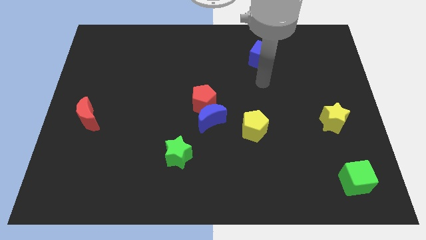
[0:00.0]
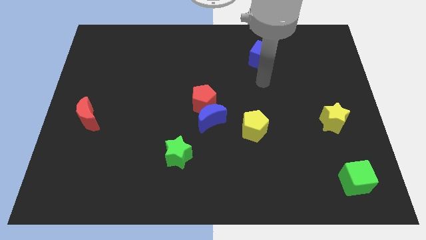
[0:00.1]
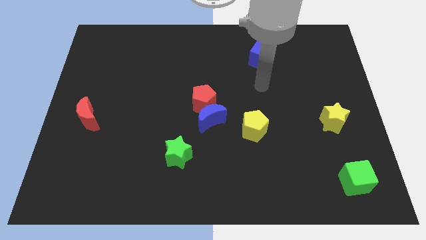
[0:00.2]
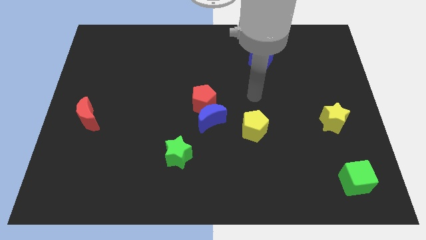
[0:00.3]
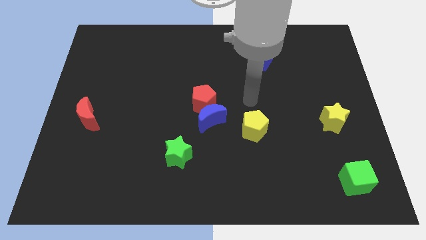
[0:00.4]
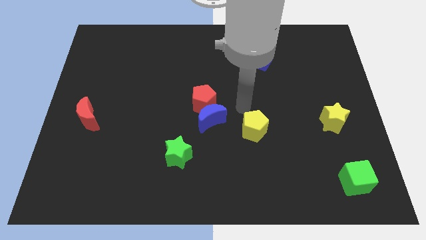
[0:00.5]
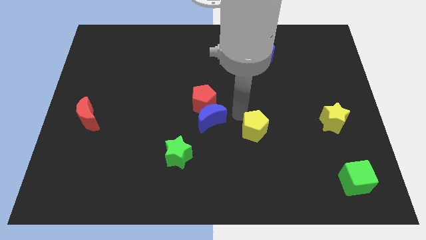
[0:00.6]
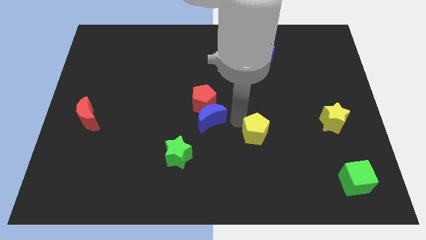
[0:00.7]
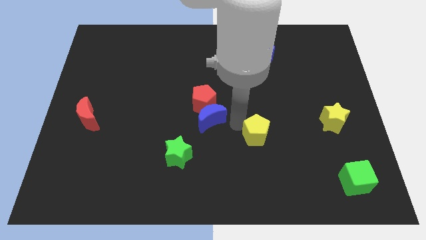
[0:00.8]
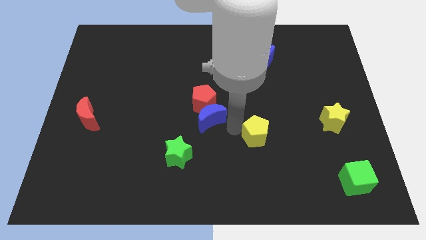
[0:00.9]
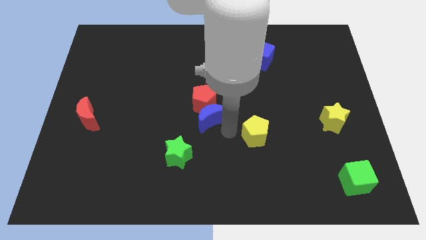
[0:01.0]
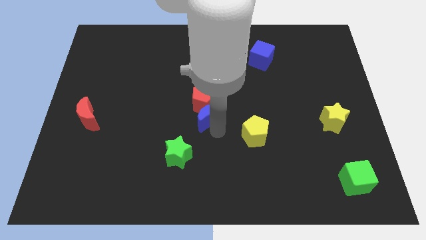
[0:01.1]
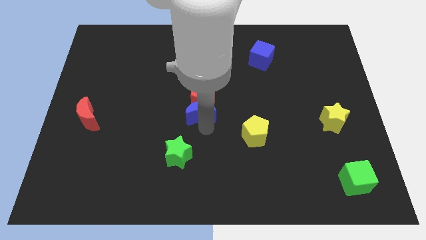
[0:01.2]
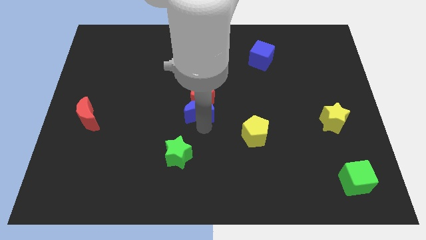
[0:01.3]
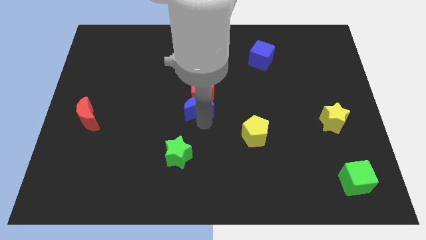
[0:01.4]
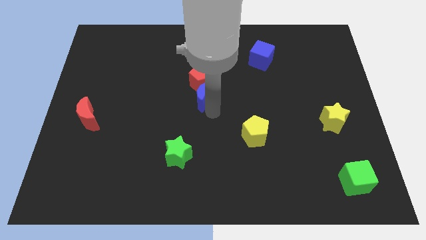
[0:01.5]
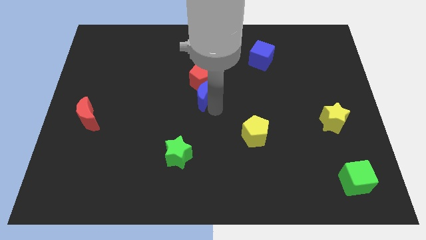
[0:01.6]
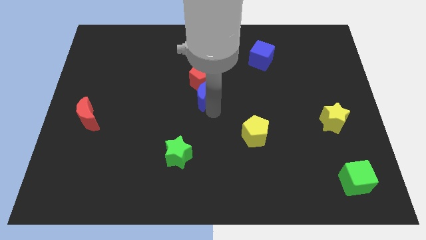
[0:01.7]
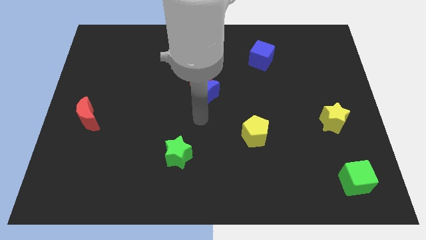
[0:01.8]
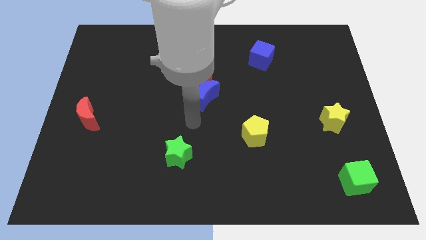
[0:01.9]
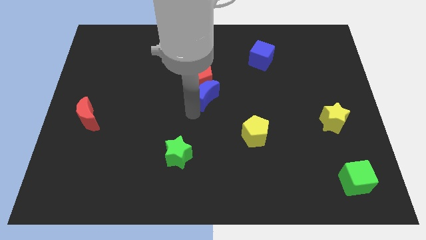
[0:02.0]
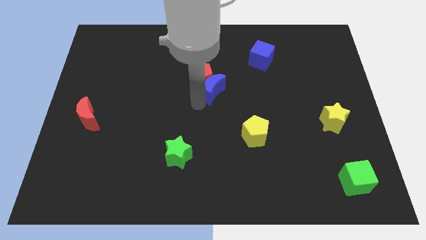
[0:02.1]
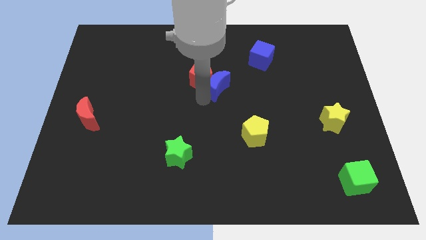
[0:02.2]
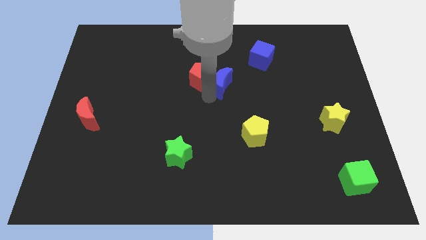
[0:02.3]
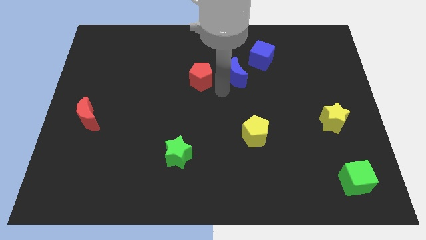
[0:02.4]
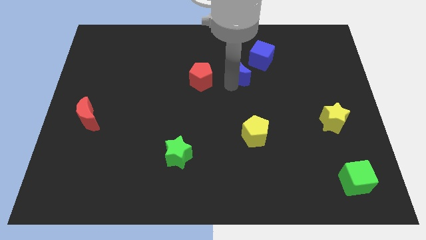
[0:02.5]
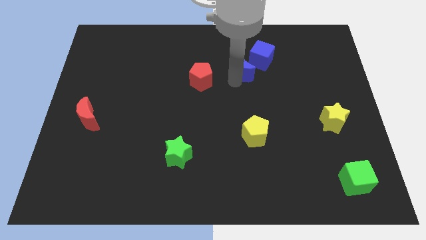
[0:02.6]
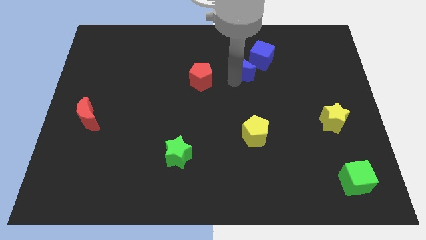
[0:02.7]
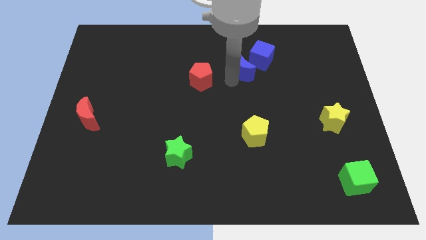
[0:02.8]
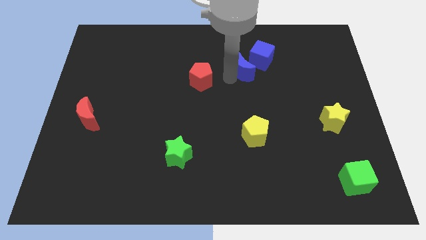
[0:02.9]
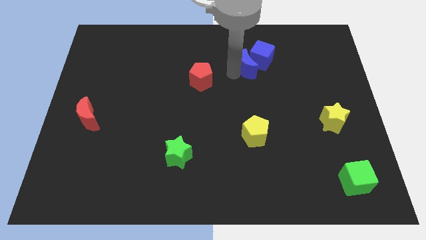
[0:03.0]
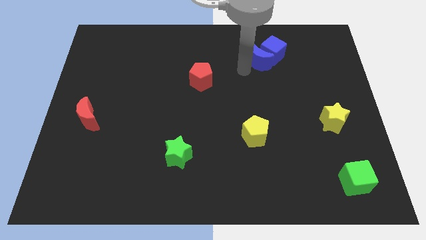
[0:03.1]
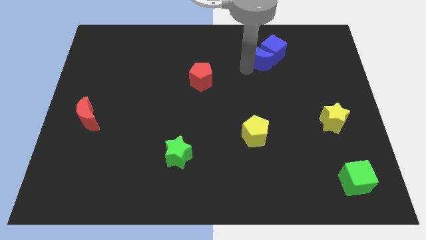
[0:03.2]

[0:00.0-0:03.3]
push the blue moon into the blue cube

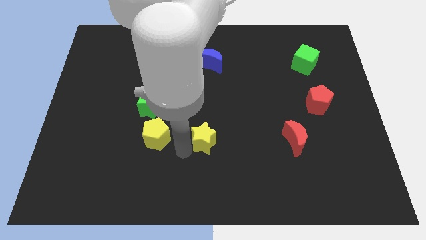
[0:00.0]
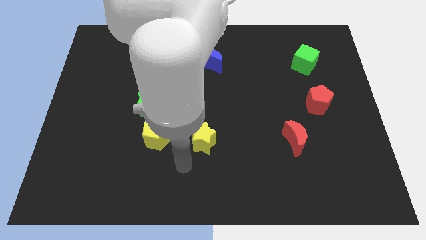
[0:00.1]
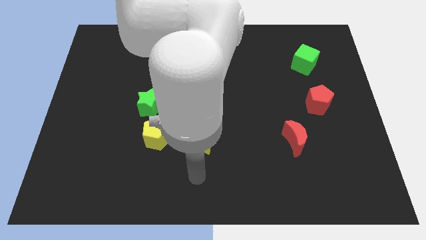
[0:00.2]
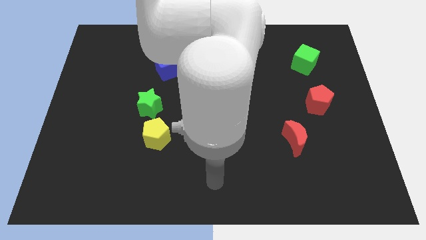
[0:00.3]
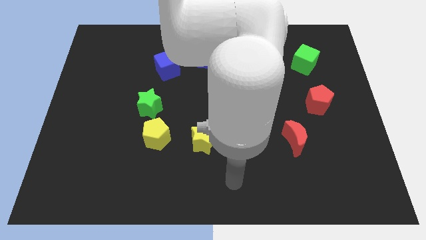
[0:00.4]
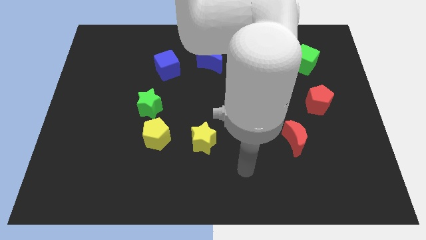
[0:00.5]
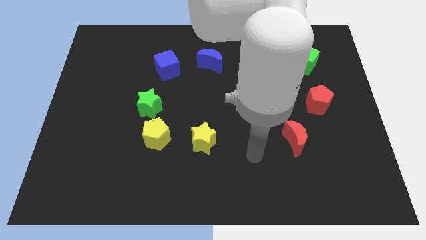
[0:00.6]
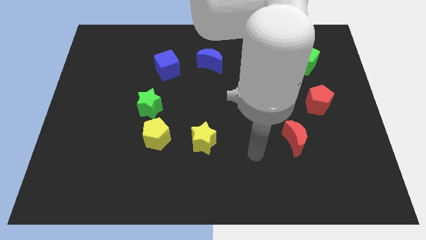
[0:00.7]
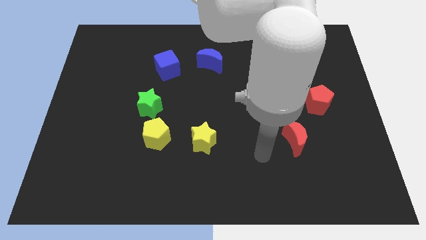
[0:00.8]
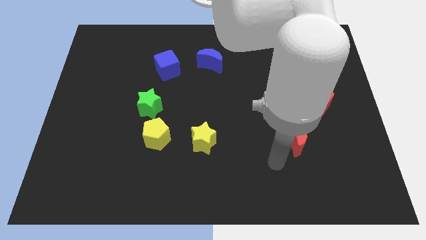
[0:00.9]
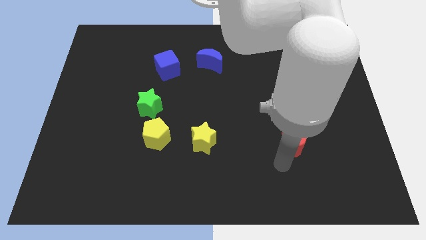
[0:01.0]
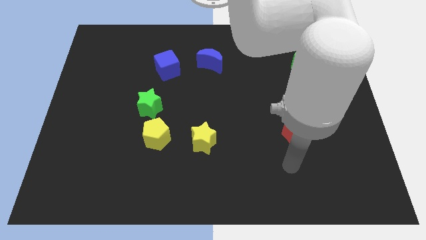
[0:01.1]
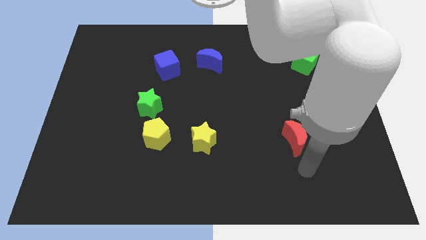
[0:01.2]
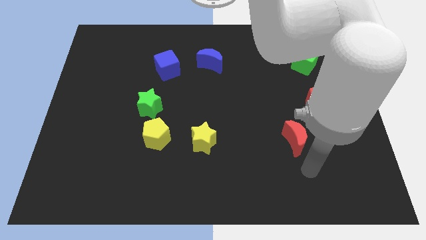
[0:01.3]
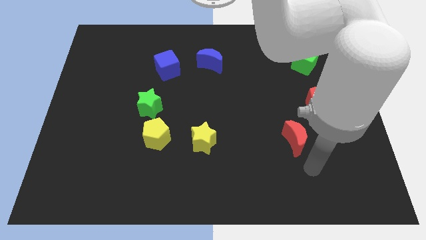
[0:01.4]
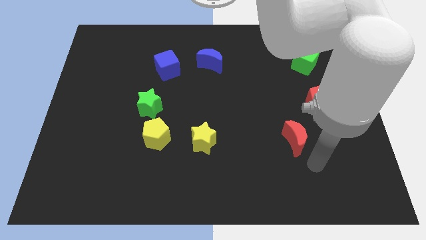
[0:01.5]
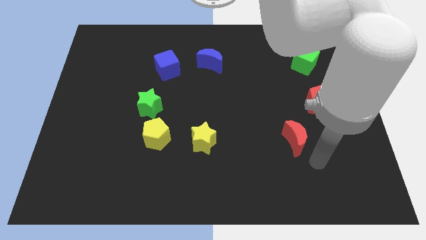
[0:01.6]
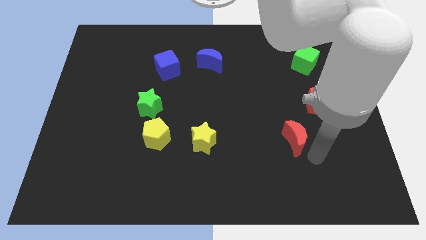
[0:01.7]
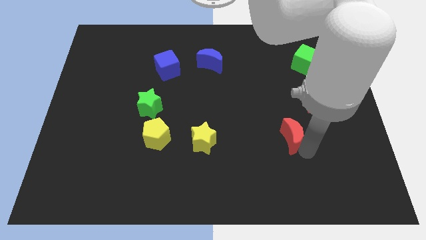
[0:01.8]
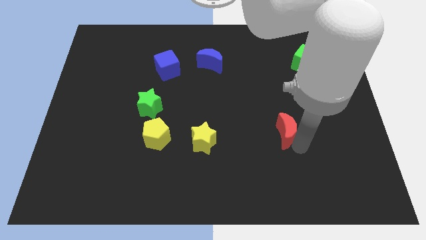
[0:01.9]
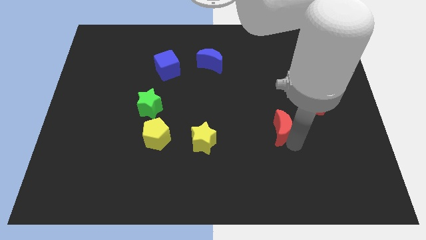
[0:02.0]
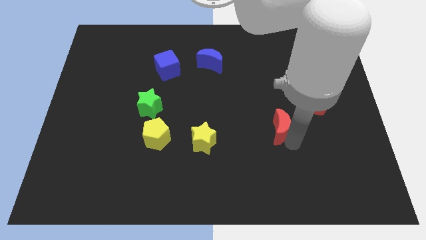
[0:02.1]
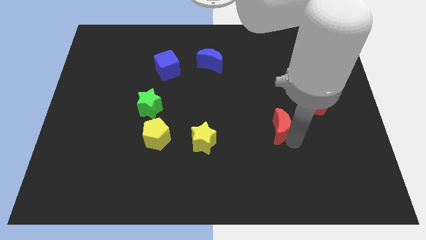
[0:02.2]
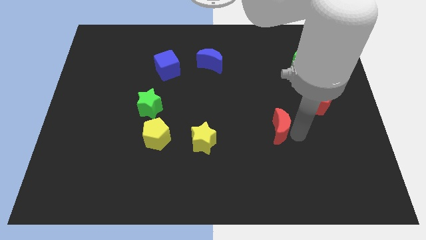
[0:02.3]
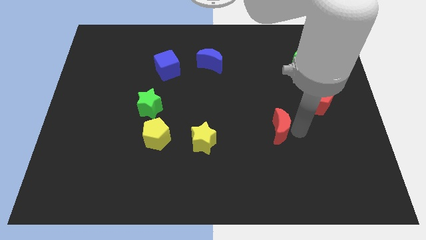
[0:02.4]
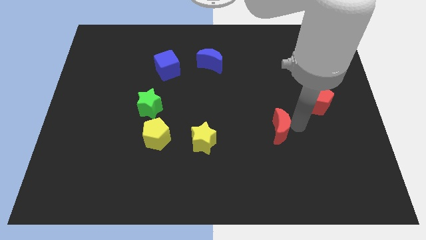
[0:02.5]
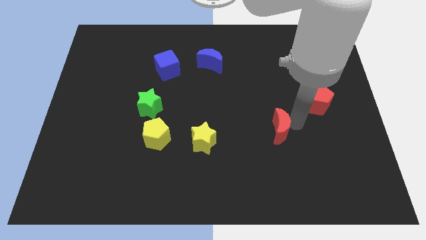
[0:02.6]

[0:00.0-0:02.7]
point your arm between red moon and red pentgon

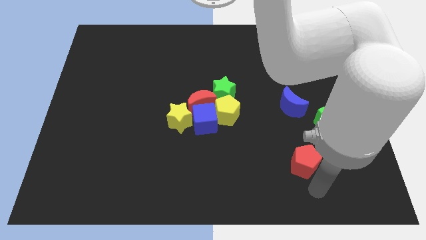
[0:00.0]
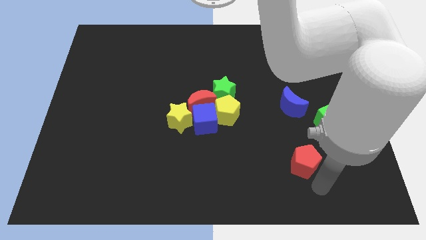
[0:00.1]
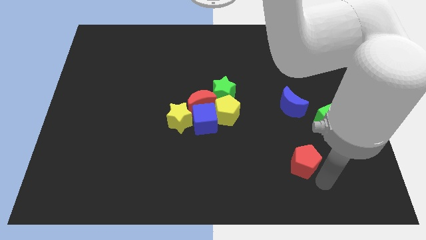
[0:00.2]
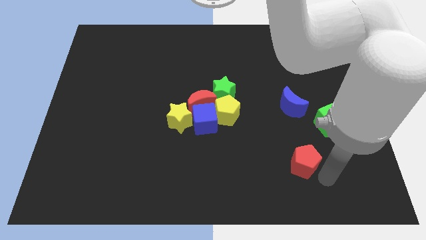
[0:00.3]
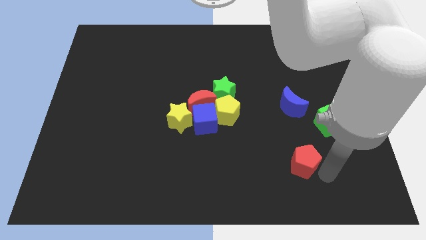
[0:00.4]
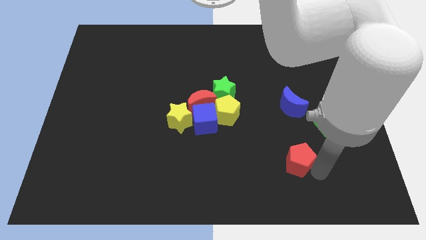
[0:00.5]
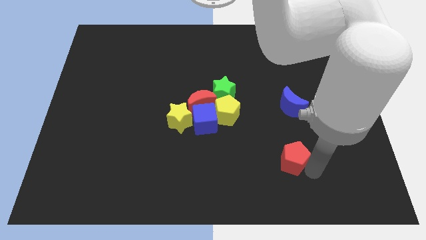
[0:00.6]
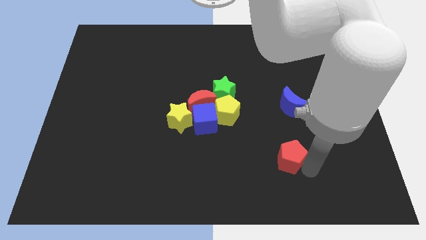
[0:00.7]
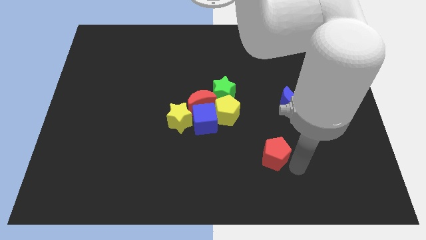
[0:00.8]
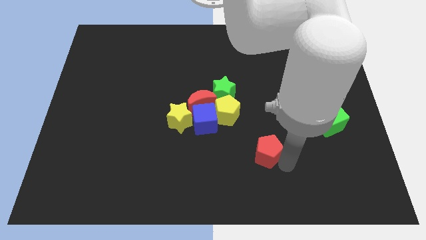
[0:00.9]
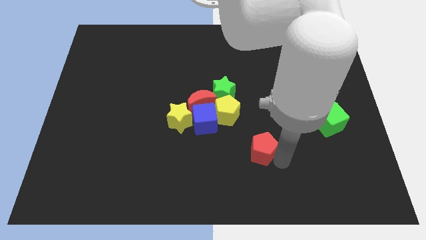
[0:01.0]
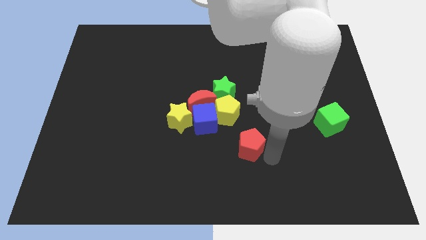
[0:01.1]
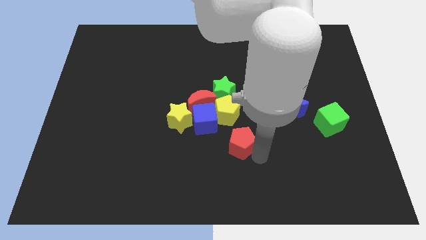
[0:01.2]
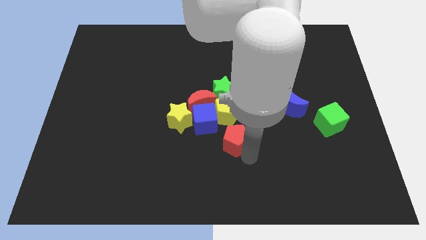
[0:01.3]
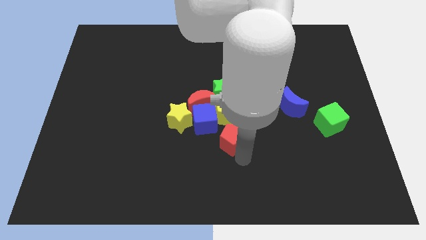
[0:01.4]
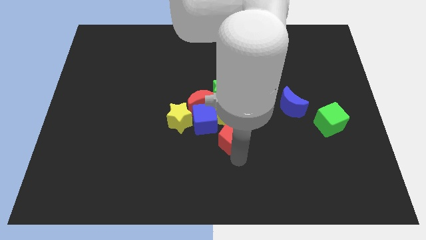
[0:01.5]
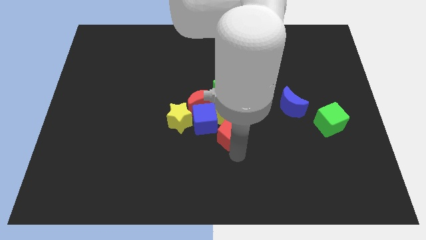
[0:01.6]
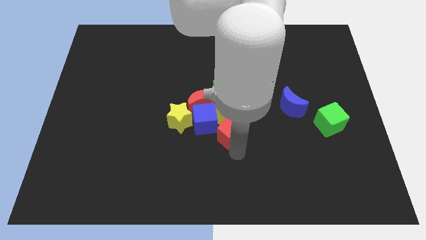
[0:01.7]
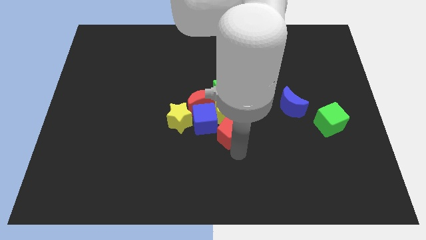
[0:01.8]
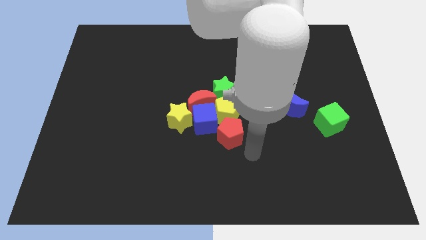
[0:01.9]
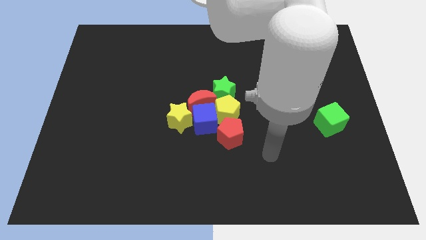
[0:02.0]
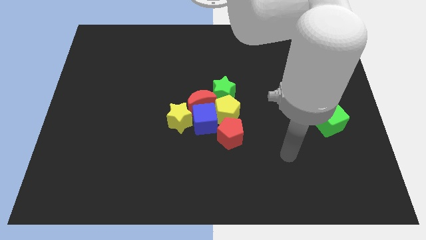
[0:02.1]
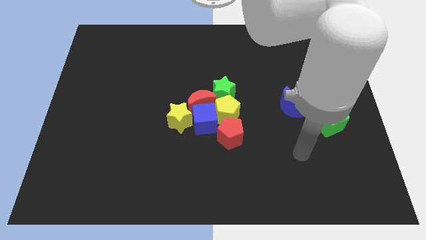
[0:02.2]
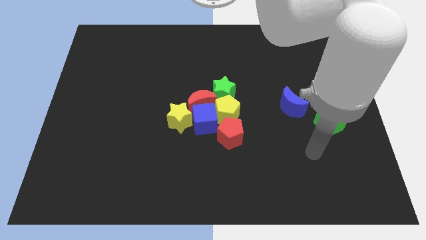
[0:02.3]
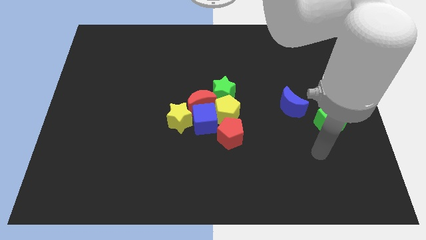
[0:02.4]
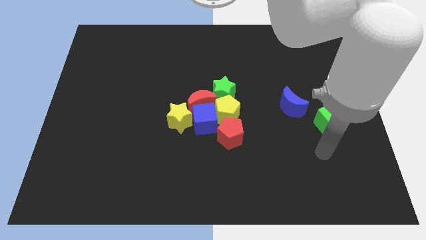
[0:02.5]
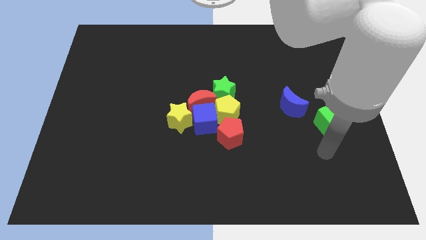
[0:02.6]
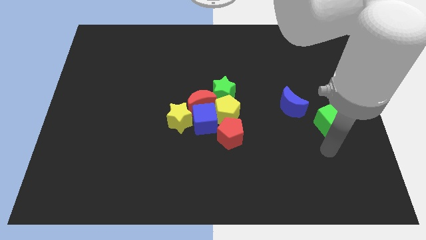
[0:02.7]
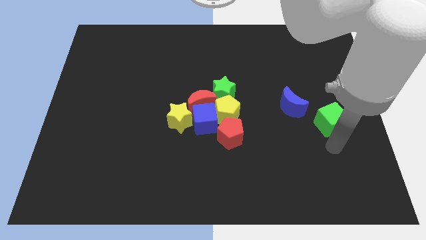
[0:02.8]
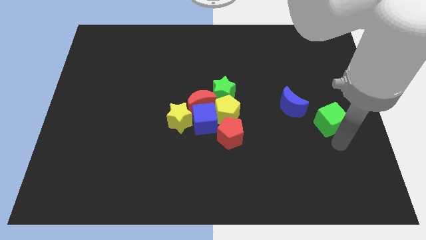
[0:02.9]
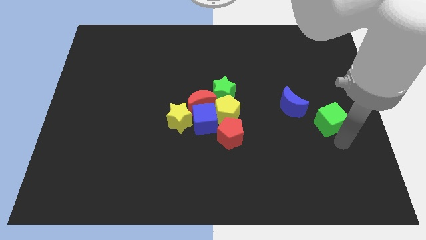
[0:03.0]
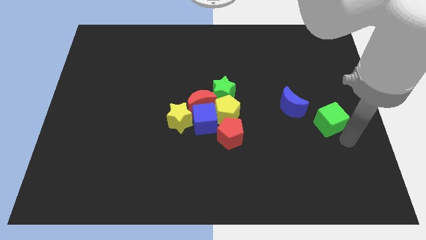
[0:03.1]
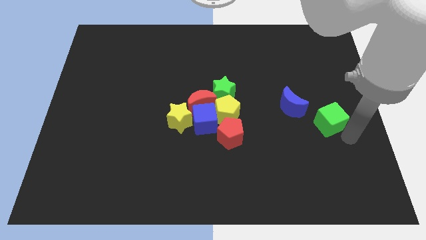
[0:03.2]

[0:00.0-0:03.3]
move the red pentagon to the bottom side of the yellow pentagon
